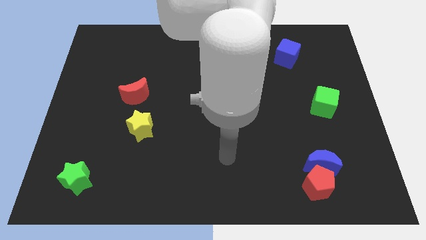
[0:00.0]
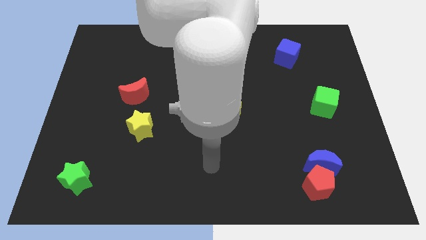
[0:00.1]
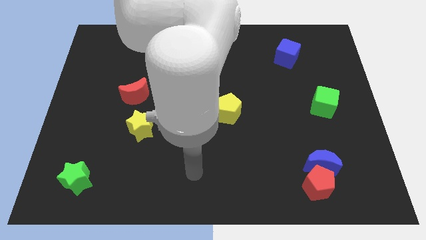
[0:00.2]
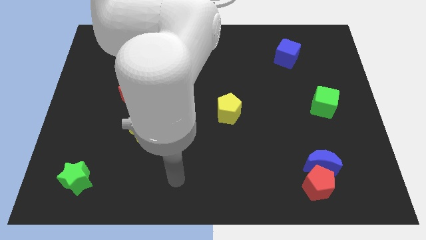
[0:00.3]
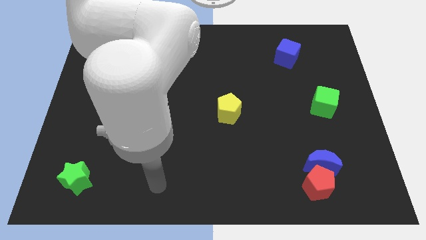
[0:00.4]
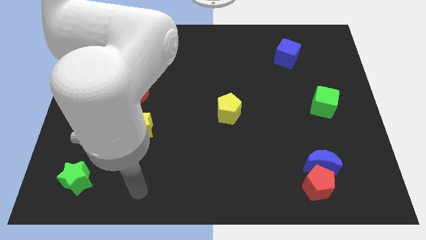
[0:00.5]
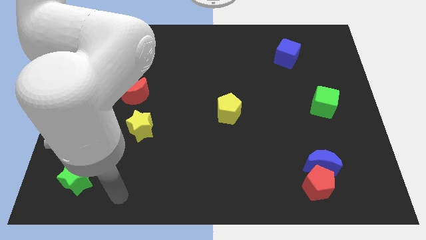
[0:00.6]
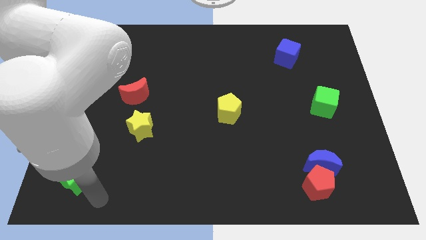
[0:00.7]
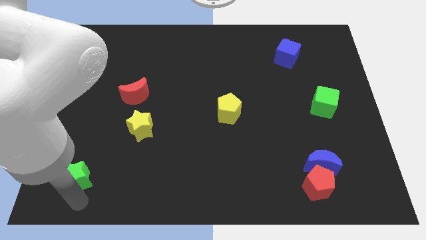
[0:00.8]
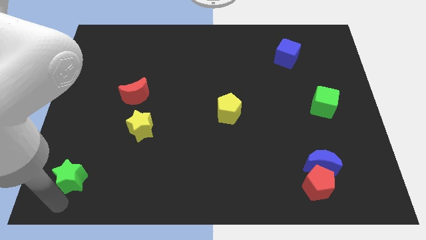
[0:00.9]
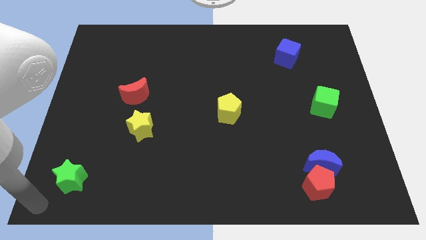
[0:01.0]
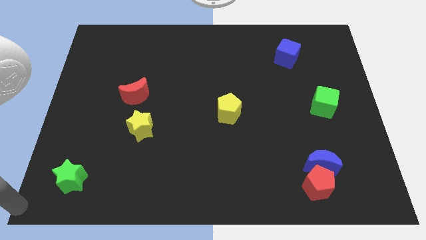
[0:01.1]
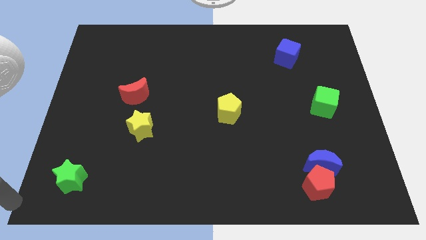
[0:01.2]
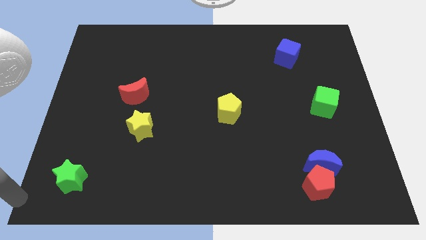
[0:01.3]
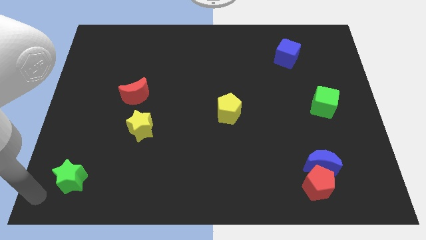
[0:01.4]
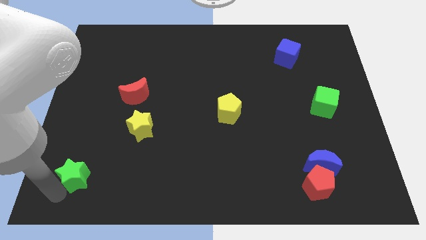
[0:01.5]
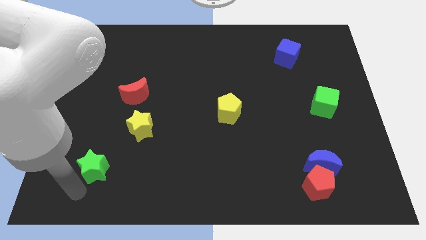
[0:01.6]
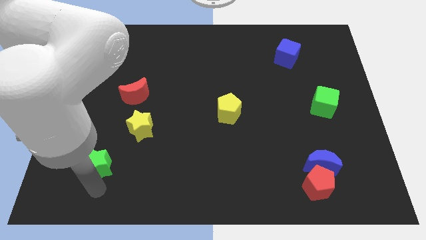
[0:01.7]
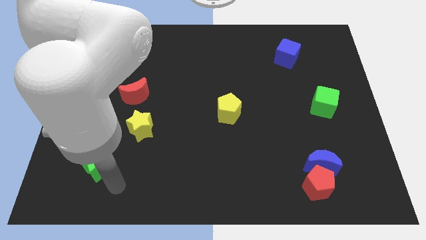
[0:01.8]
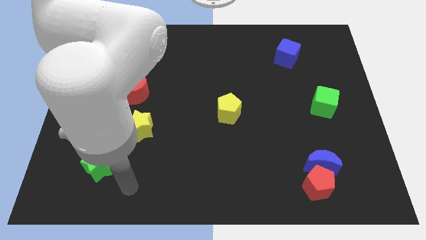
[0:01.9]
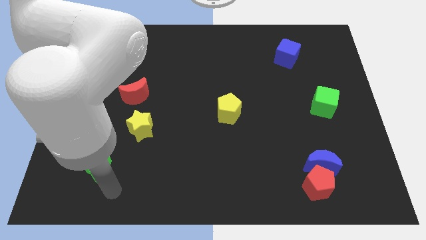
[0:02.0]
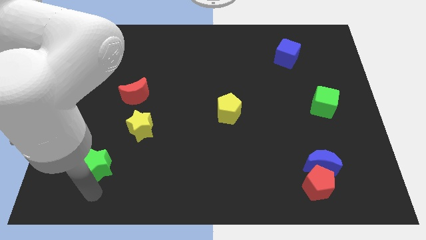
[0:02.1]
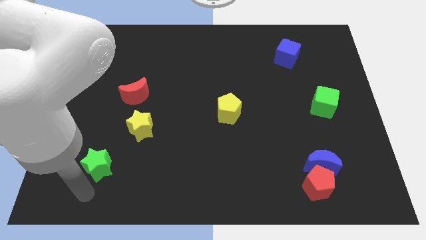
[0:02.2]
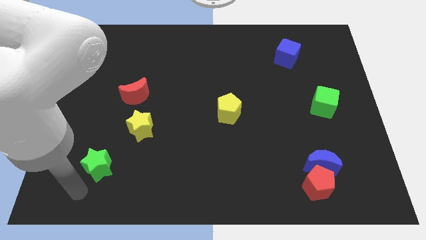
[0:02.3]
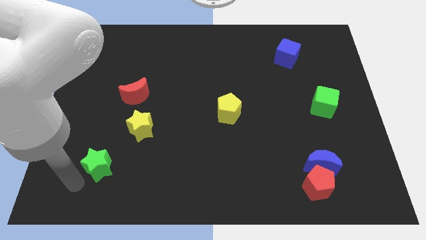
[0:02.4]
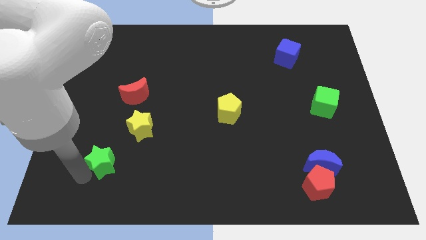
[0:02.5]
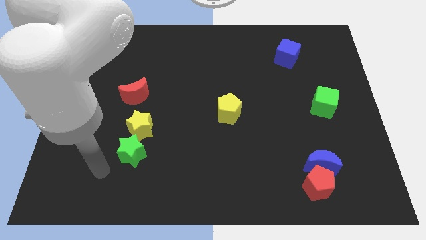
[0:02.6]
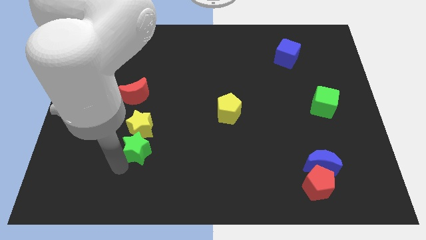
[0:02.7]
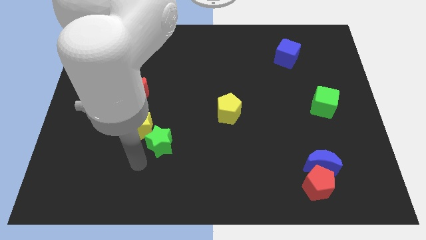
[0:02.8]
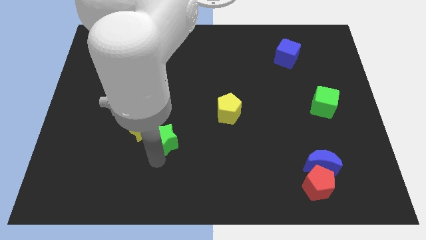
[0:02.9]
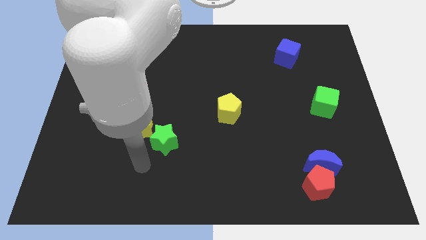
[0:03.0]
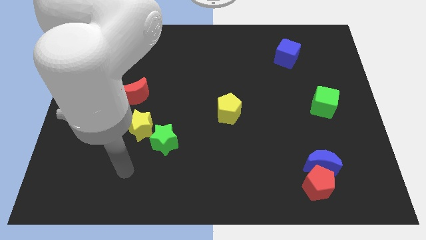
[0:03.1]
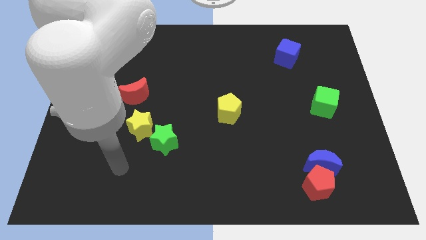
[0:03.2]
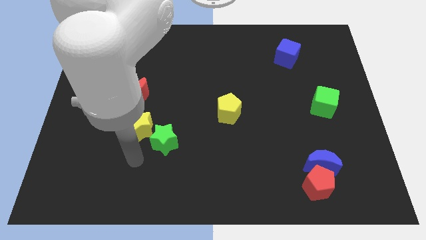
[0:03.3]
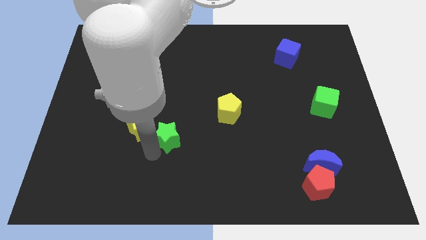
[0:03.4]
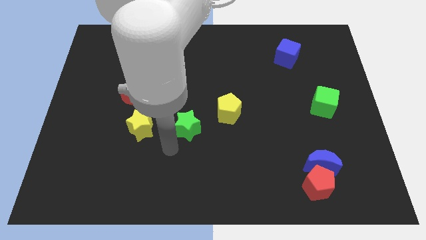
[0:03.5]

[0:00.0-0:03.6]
move the green star in between the yellow pentagon and yellow star

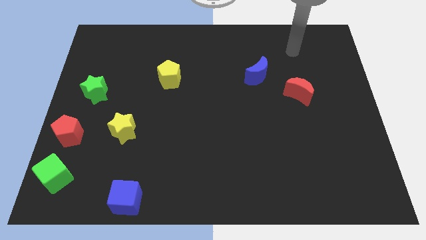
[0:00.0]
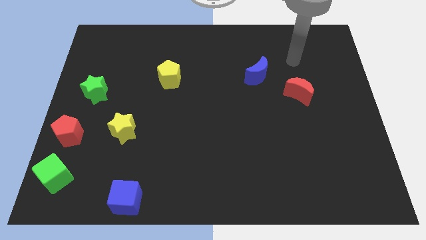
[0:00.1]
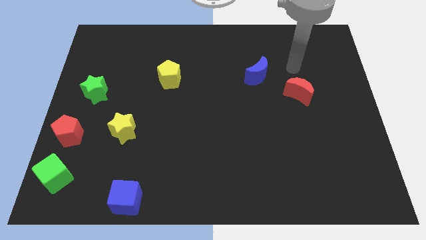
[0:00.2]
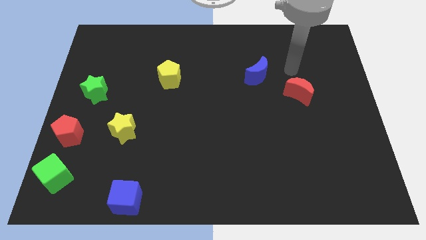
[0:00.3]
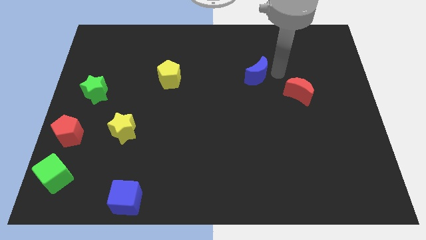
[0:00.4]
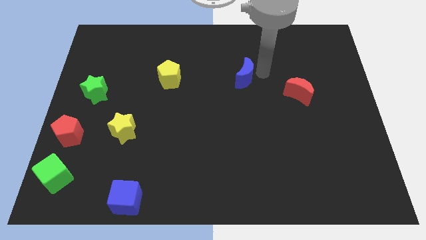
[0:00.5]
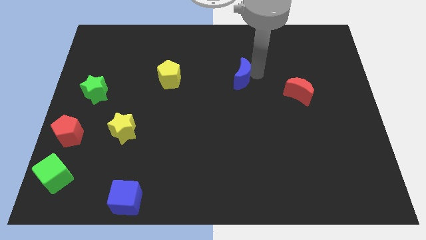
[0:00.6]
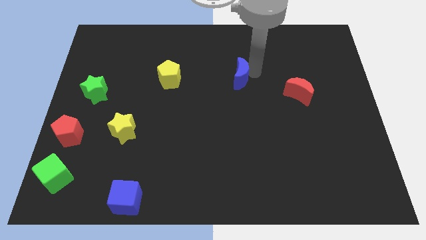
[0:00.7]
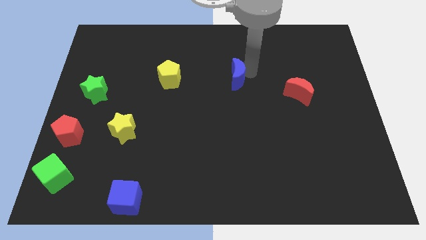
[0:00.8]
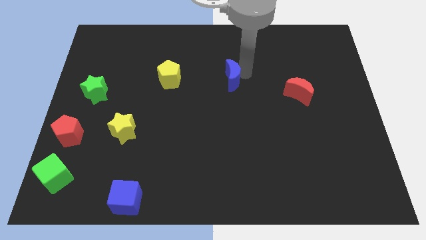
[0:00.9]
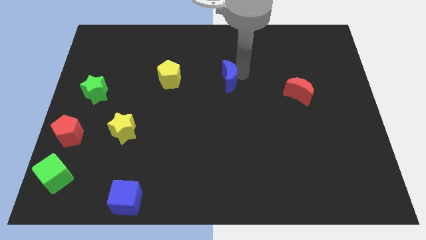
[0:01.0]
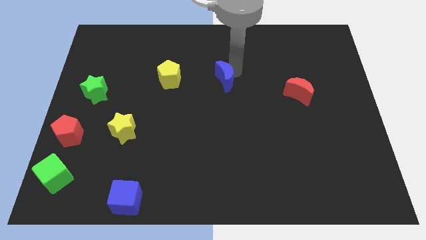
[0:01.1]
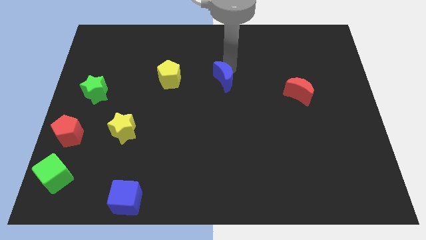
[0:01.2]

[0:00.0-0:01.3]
push the blue crescent slightly to the left

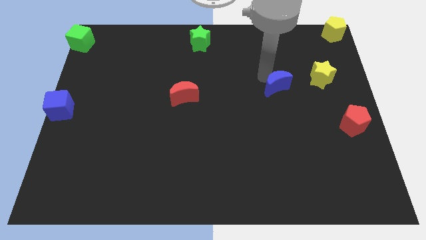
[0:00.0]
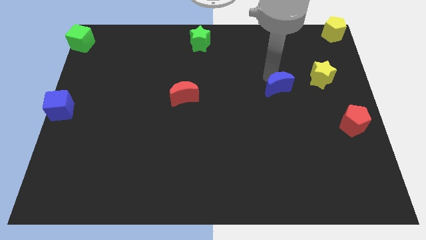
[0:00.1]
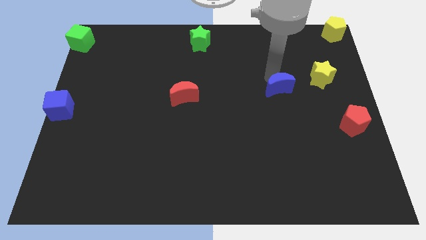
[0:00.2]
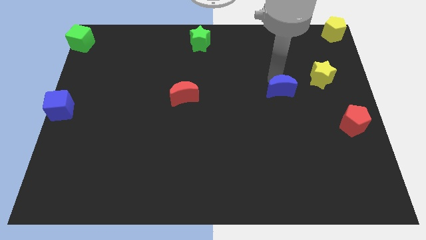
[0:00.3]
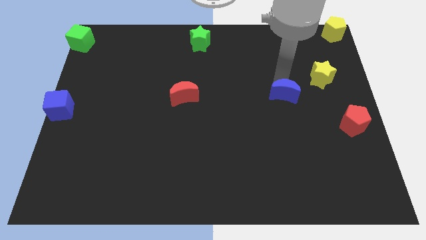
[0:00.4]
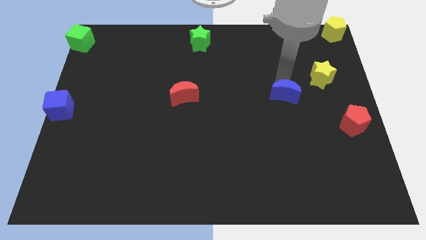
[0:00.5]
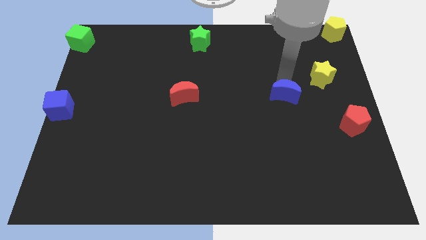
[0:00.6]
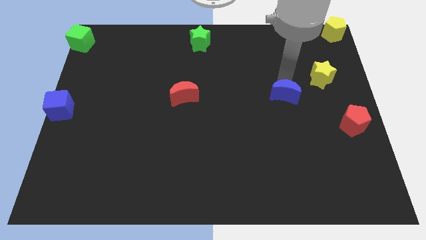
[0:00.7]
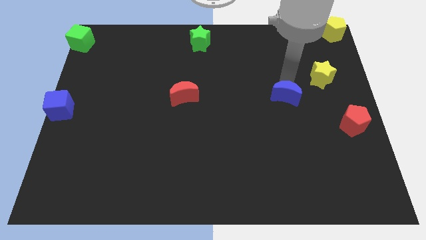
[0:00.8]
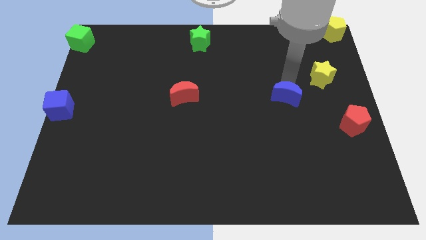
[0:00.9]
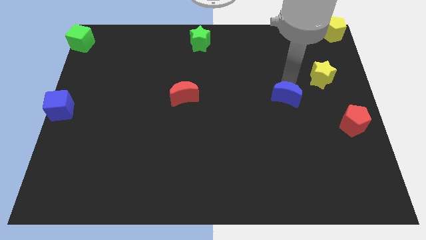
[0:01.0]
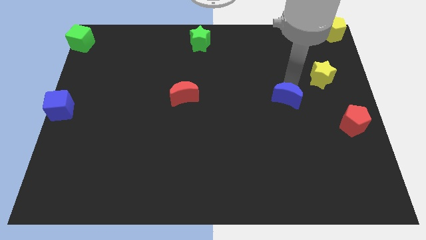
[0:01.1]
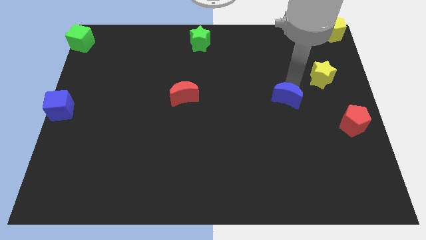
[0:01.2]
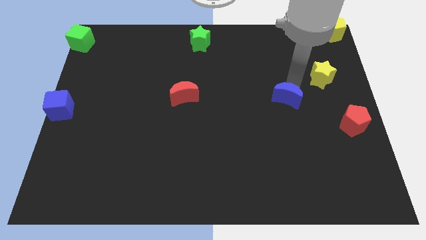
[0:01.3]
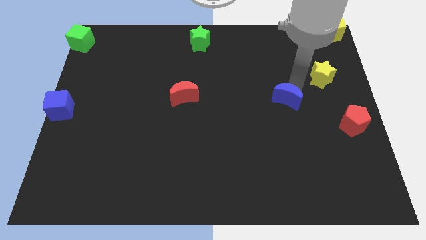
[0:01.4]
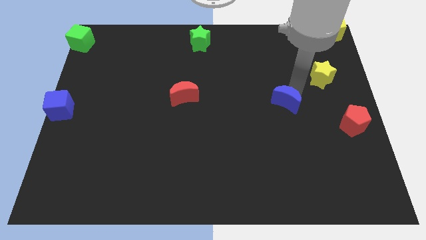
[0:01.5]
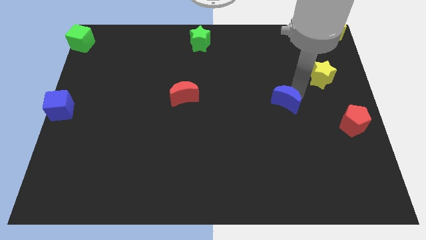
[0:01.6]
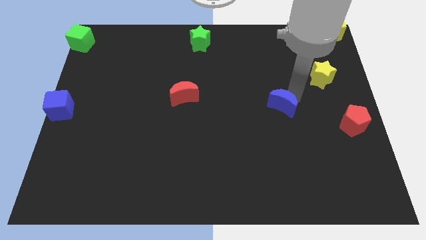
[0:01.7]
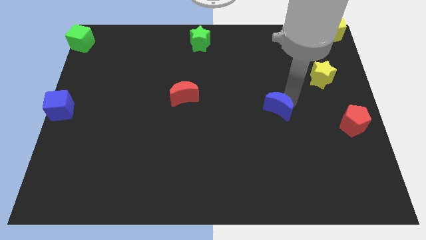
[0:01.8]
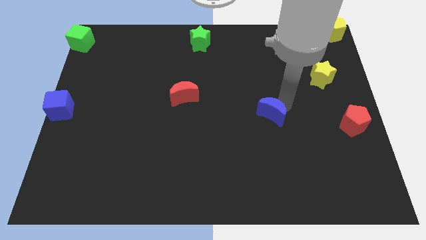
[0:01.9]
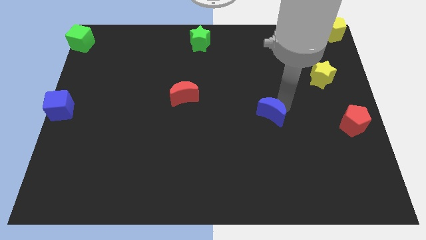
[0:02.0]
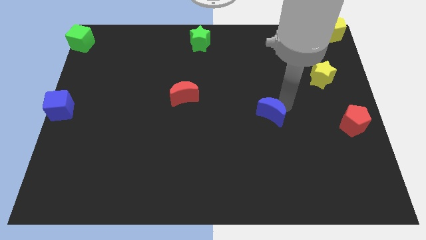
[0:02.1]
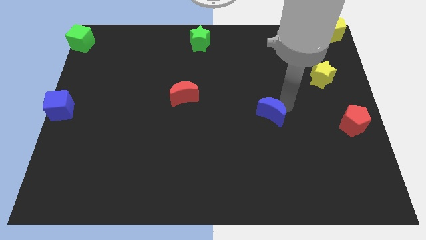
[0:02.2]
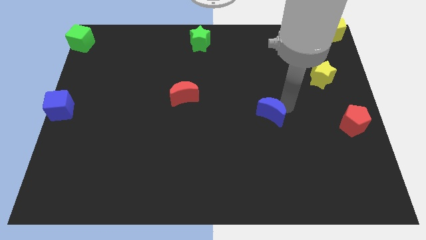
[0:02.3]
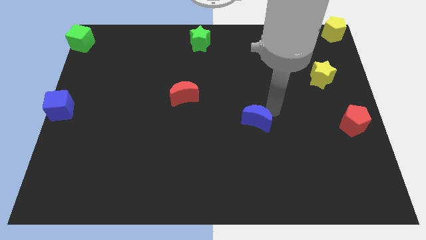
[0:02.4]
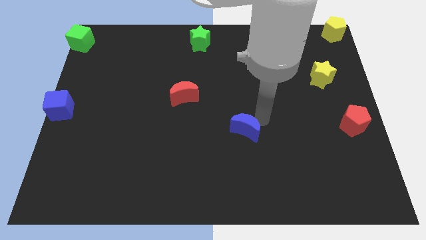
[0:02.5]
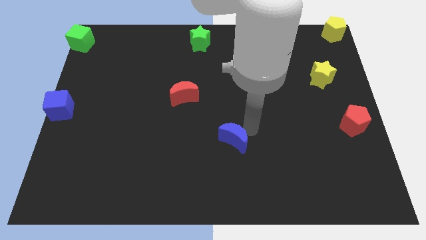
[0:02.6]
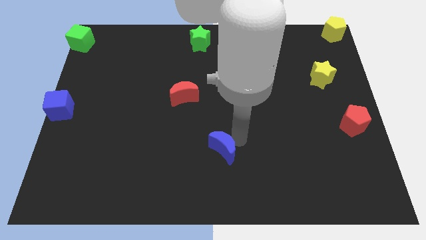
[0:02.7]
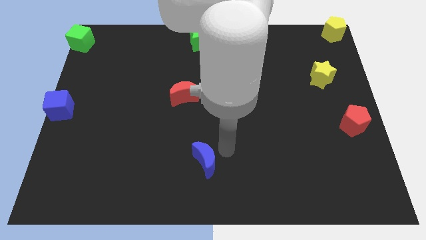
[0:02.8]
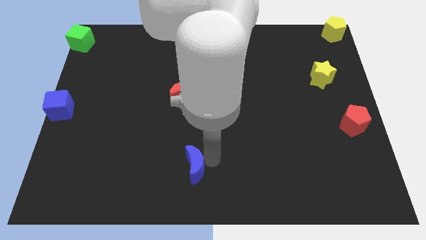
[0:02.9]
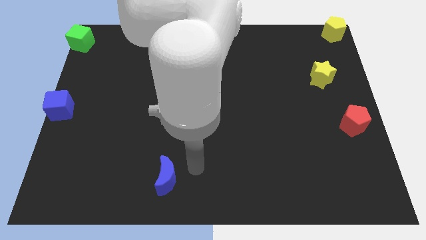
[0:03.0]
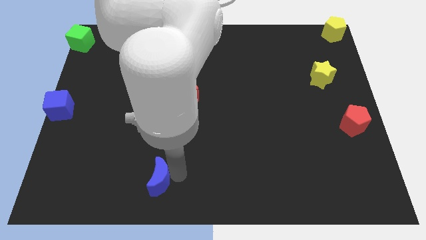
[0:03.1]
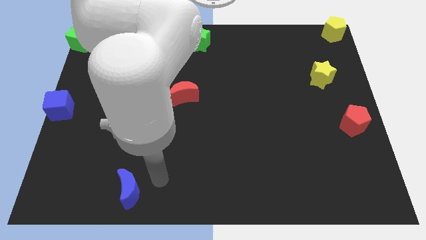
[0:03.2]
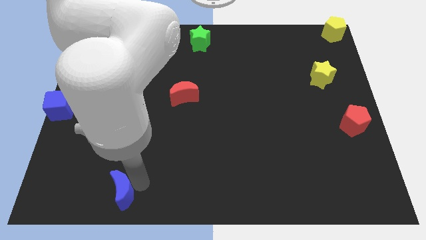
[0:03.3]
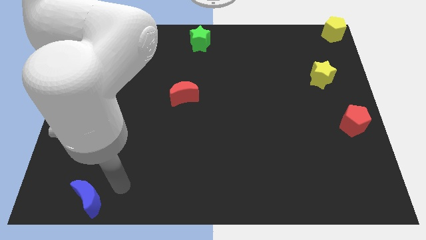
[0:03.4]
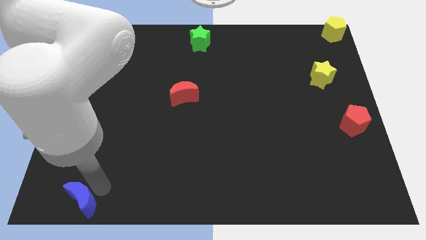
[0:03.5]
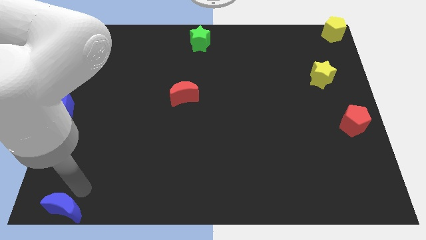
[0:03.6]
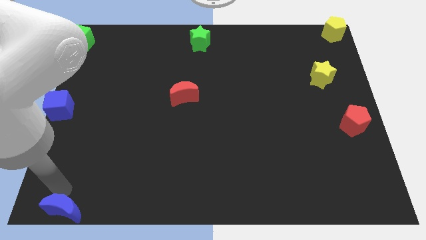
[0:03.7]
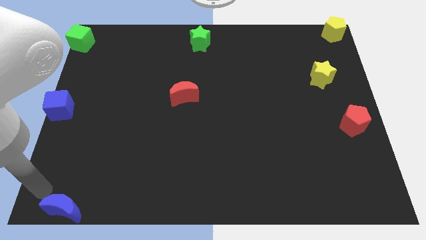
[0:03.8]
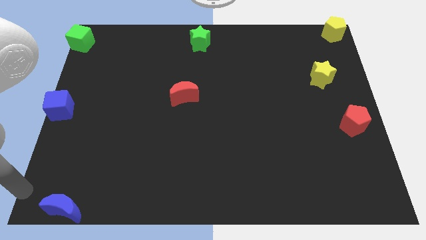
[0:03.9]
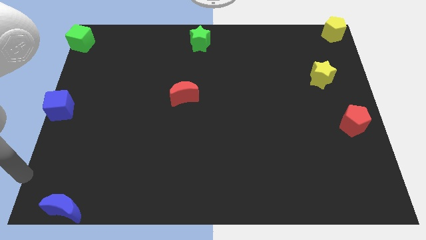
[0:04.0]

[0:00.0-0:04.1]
move the blue moon to the bottom left side
